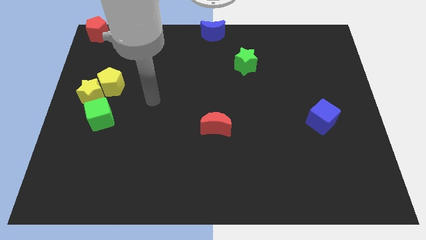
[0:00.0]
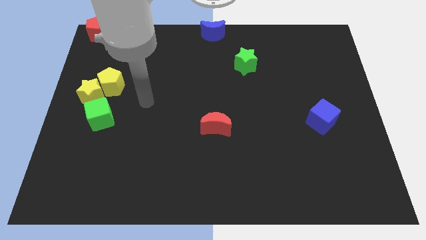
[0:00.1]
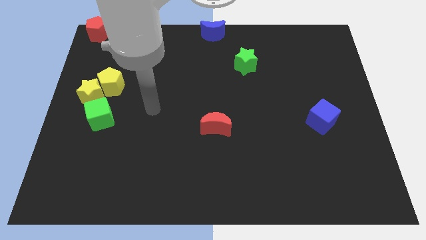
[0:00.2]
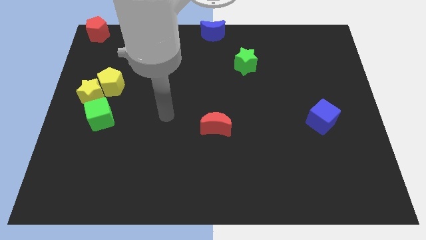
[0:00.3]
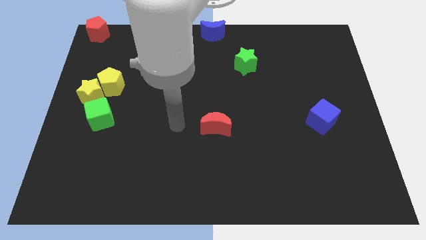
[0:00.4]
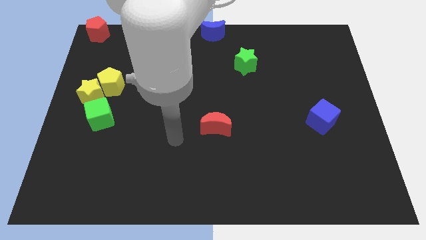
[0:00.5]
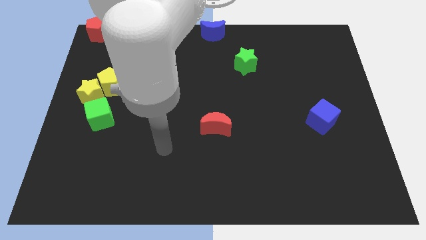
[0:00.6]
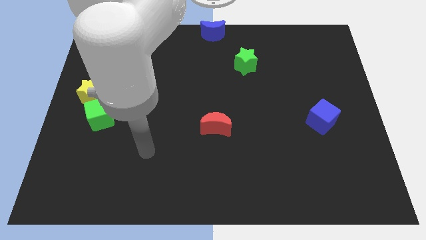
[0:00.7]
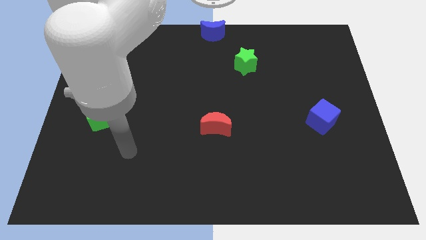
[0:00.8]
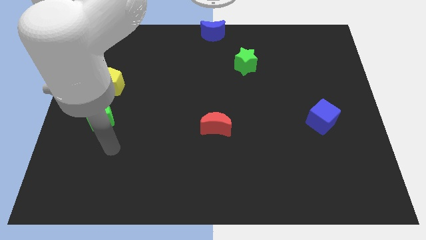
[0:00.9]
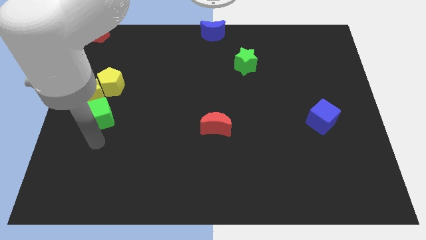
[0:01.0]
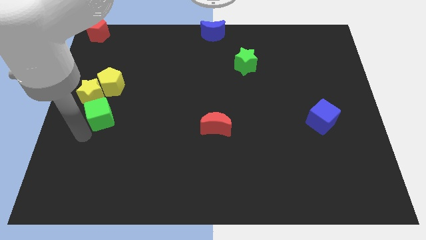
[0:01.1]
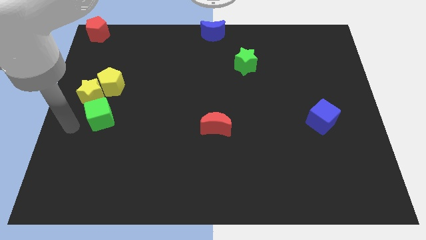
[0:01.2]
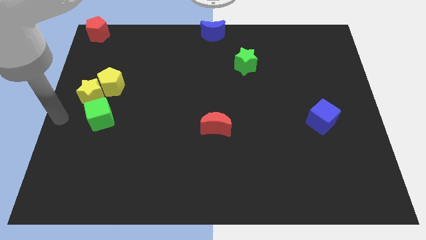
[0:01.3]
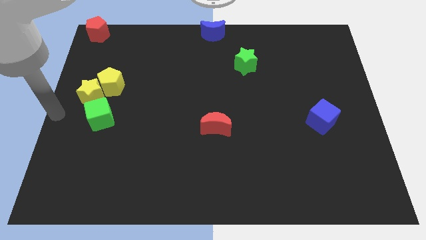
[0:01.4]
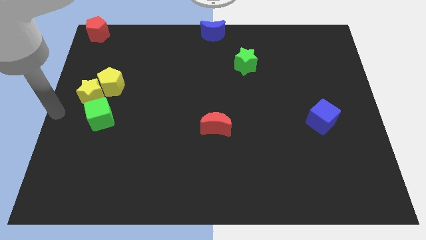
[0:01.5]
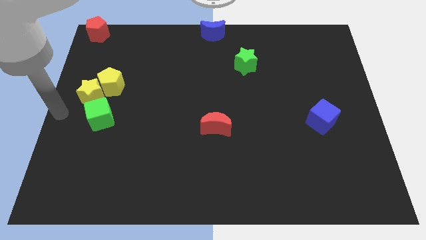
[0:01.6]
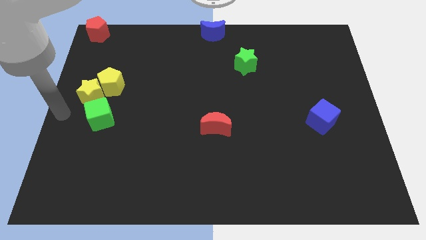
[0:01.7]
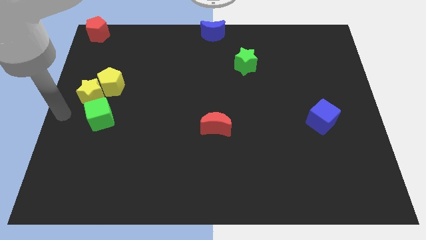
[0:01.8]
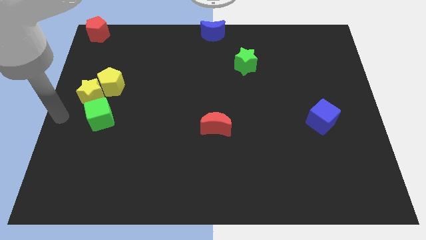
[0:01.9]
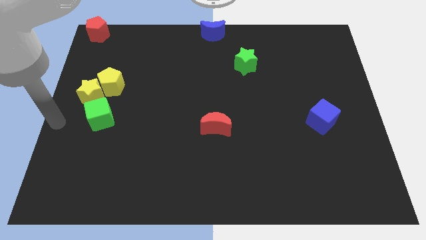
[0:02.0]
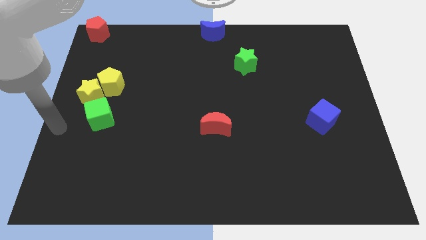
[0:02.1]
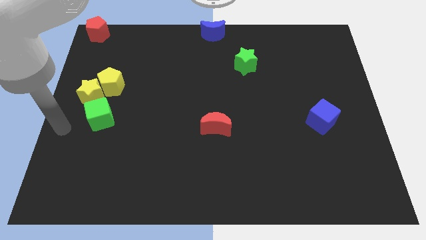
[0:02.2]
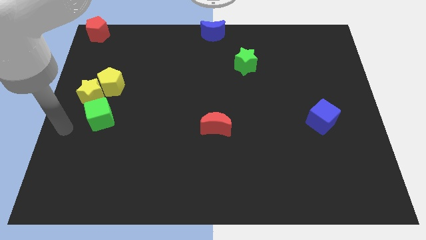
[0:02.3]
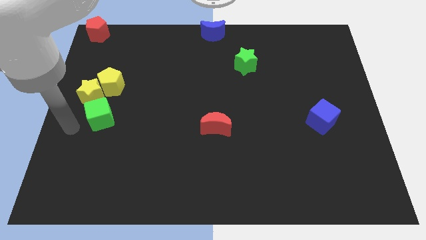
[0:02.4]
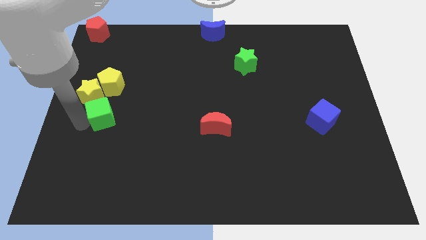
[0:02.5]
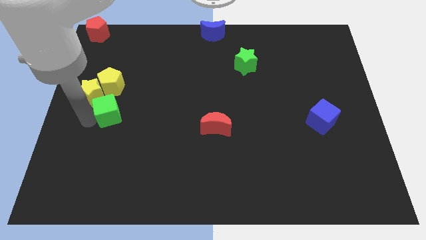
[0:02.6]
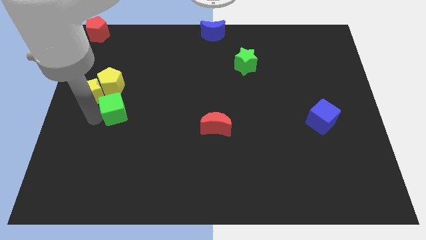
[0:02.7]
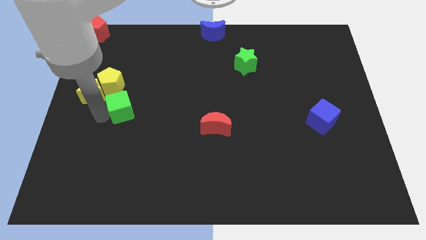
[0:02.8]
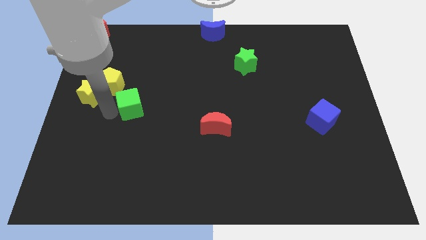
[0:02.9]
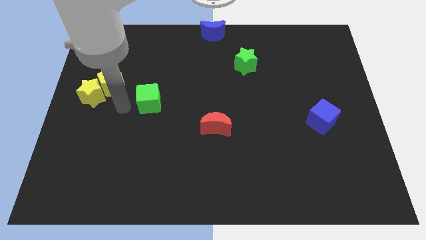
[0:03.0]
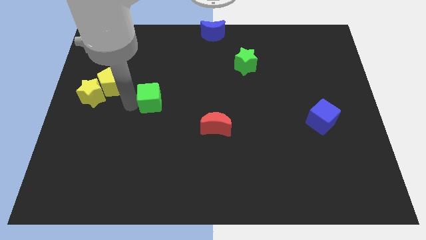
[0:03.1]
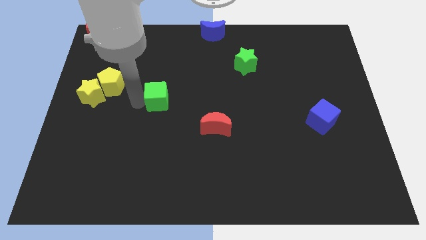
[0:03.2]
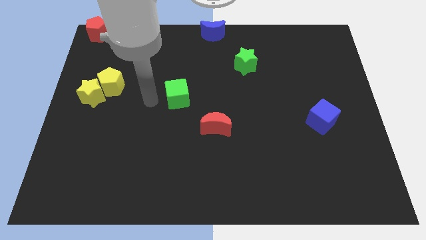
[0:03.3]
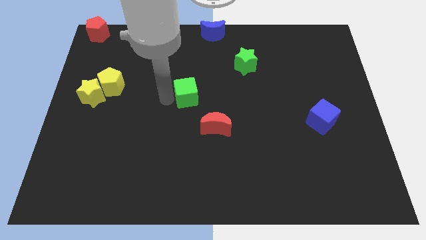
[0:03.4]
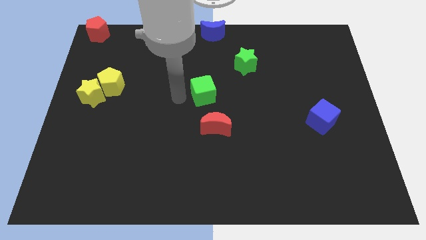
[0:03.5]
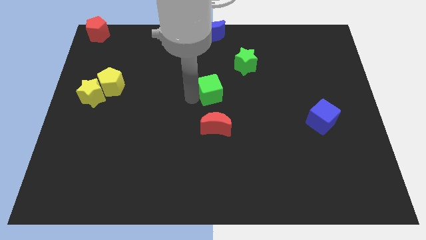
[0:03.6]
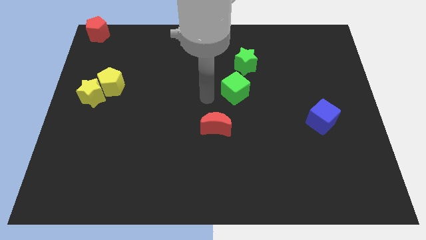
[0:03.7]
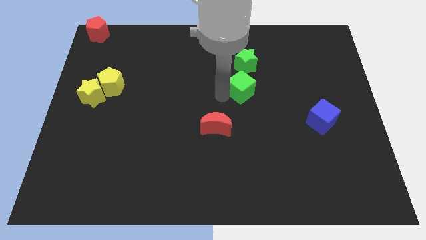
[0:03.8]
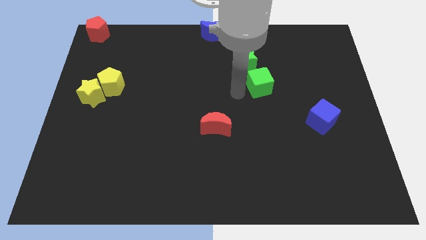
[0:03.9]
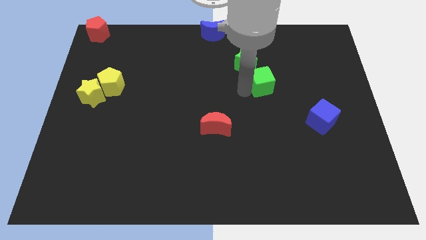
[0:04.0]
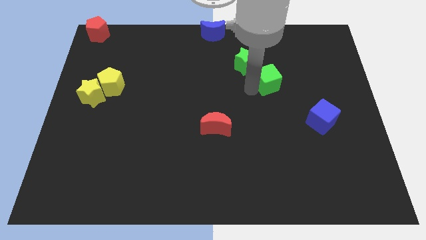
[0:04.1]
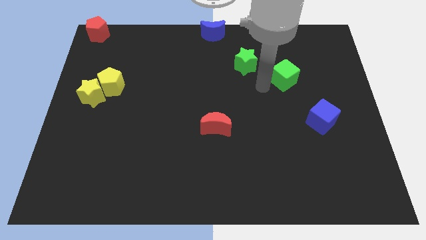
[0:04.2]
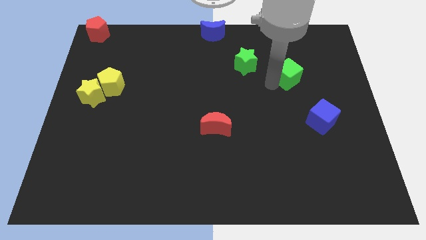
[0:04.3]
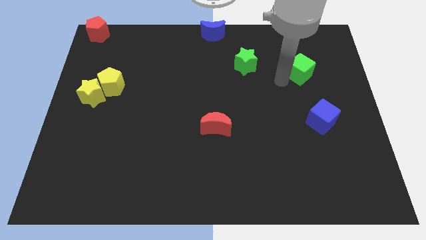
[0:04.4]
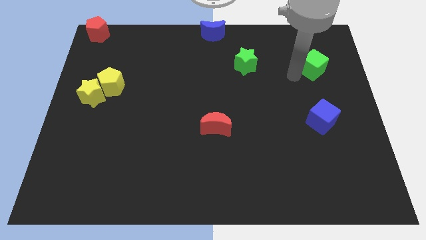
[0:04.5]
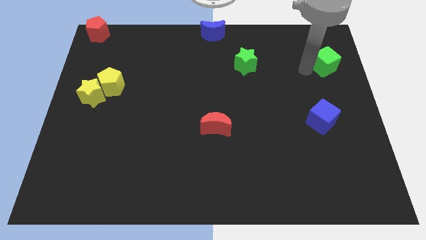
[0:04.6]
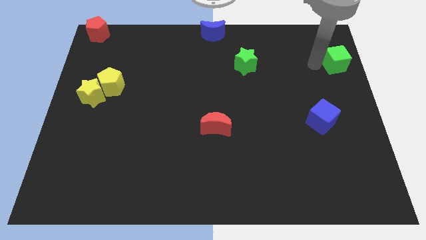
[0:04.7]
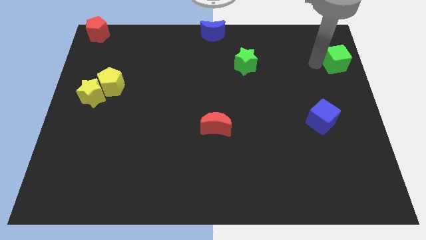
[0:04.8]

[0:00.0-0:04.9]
move the green cube to the right of the green star

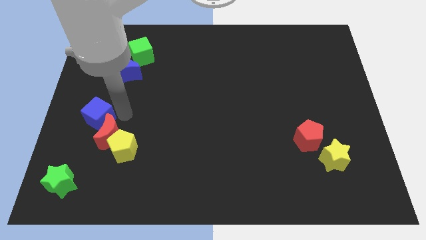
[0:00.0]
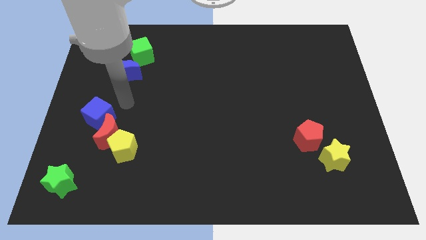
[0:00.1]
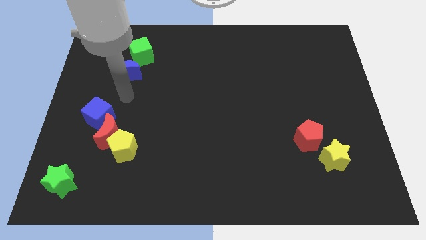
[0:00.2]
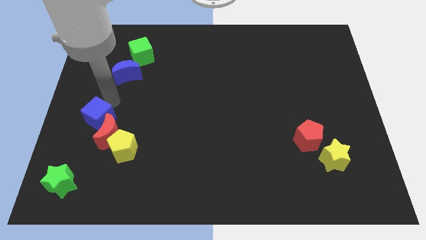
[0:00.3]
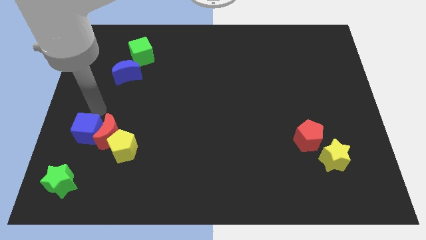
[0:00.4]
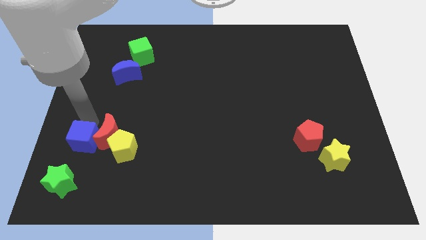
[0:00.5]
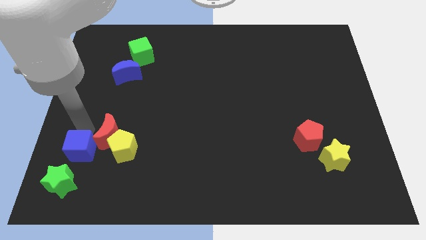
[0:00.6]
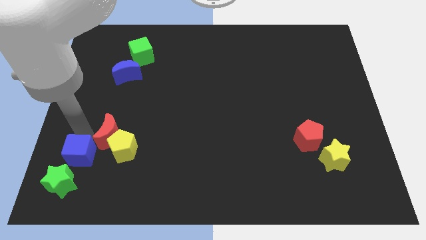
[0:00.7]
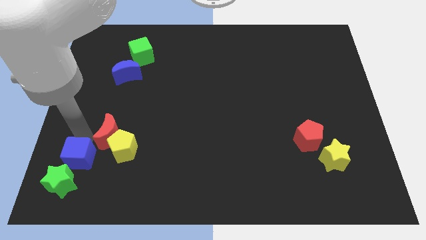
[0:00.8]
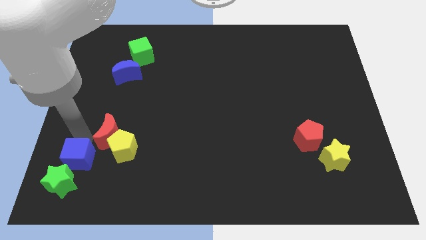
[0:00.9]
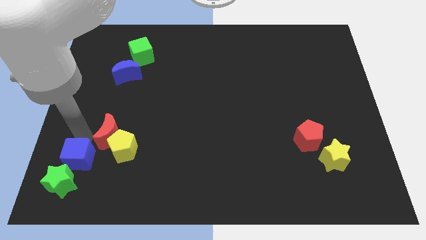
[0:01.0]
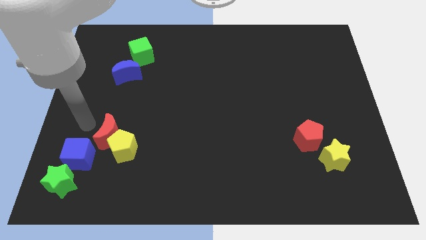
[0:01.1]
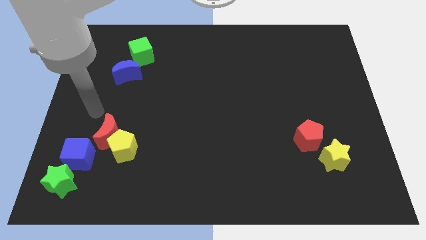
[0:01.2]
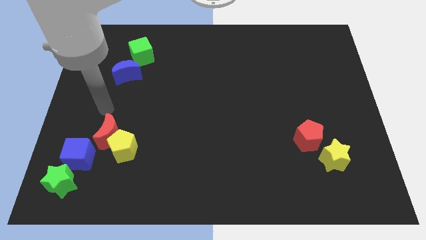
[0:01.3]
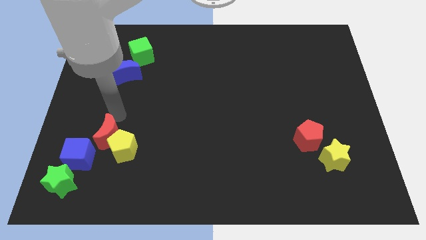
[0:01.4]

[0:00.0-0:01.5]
move the blue cube to the top of the green star

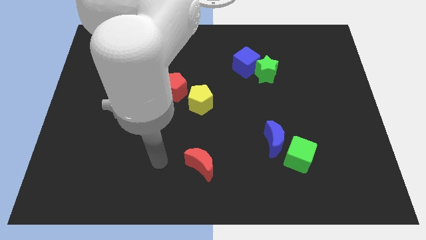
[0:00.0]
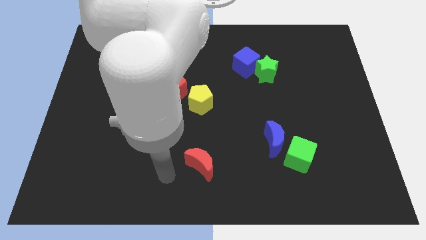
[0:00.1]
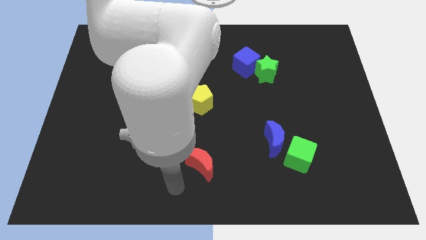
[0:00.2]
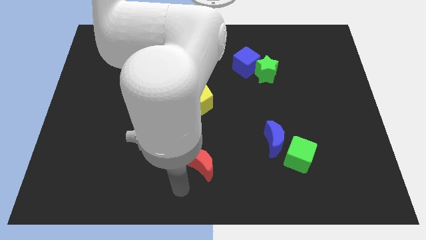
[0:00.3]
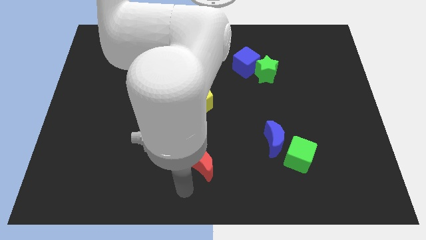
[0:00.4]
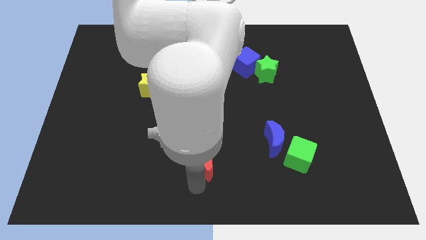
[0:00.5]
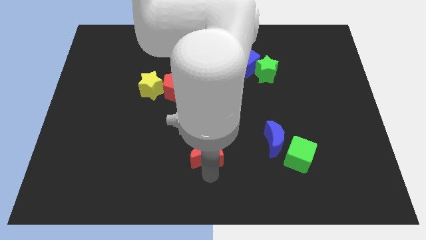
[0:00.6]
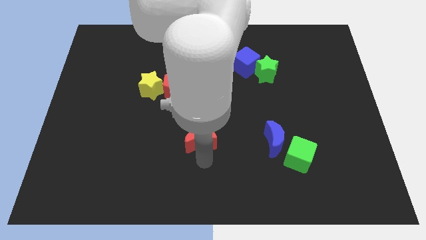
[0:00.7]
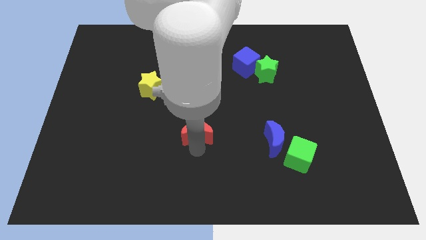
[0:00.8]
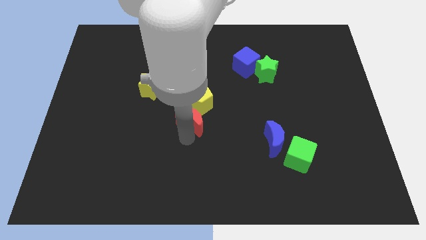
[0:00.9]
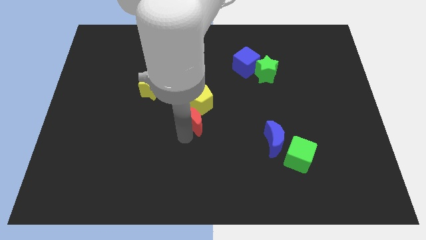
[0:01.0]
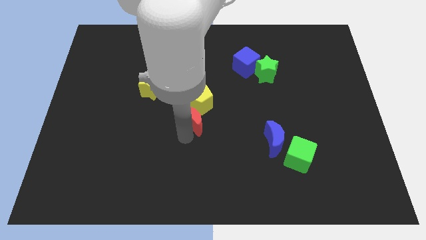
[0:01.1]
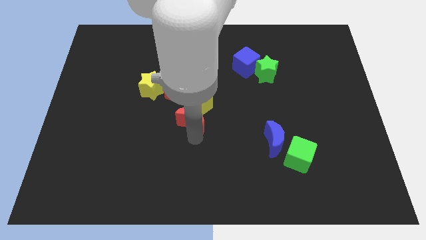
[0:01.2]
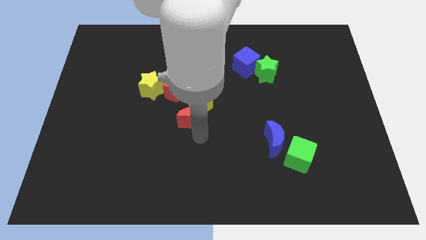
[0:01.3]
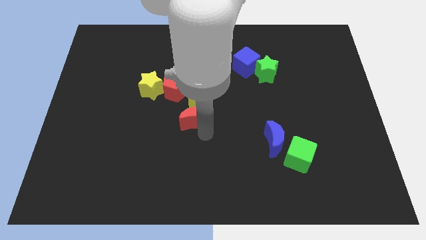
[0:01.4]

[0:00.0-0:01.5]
push the red crescent to the bottom of the yellow pentagon

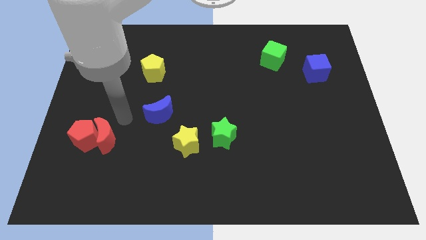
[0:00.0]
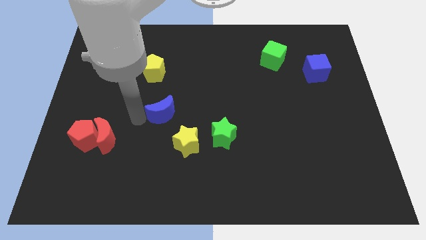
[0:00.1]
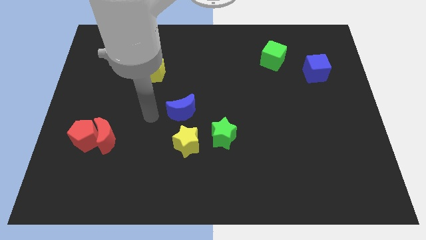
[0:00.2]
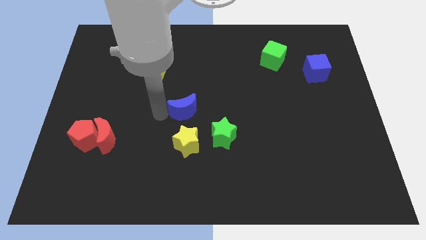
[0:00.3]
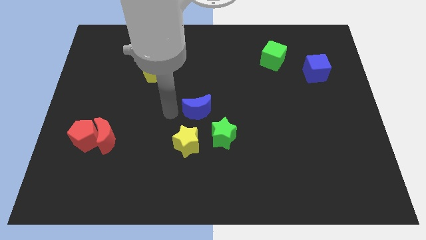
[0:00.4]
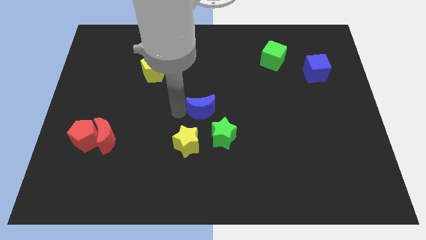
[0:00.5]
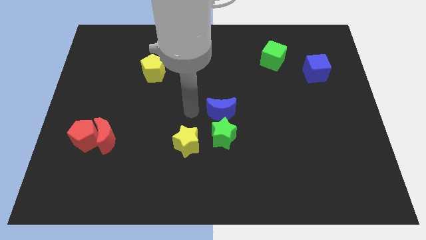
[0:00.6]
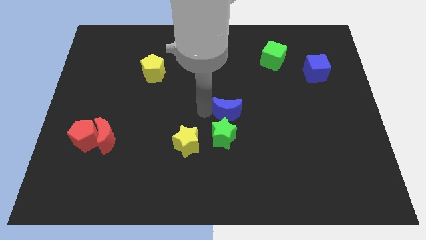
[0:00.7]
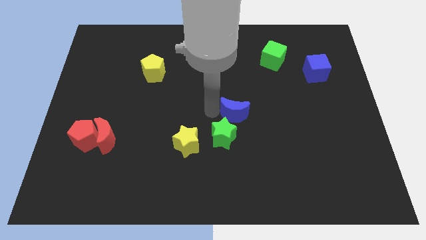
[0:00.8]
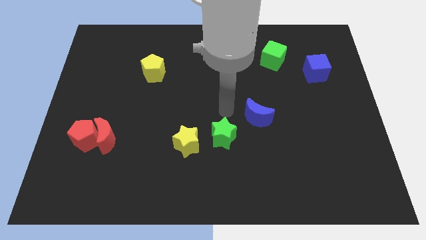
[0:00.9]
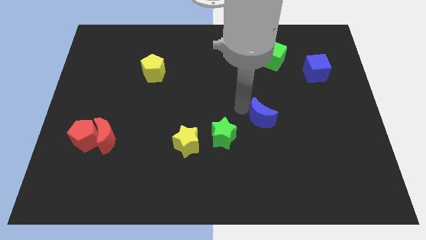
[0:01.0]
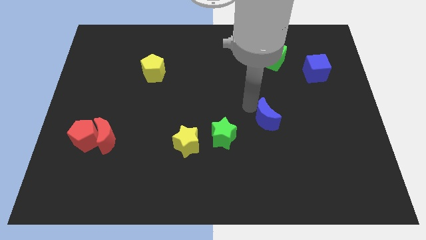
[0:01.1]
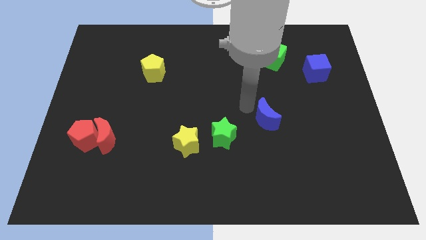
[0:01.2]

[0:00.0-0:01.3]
place the blue crescent parallel to green star
